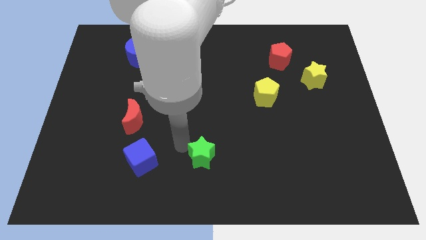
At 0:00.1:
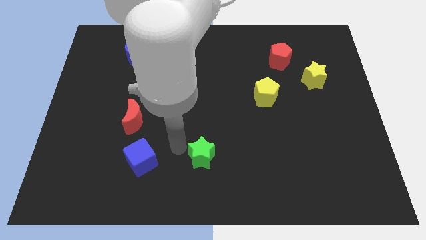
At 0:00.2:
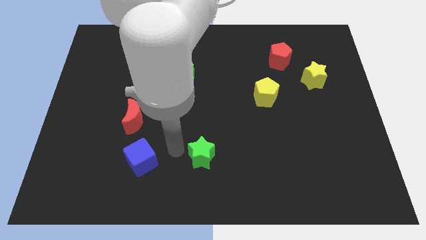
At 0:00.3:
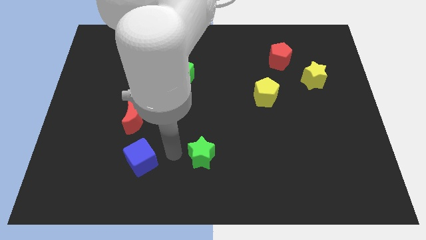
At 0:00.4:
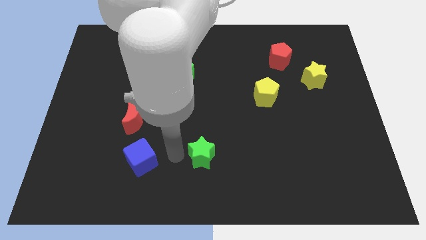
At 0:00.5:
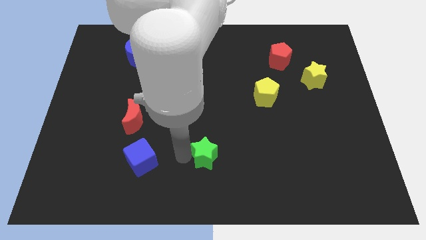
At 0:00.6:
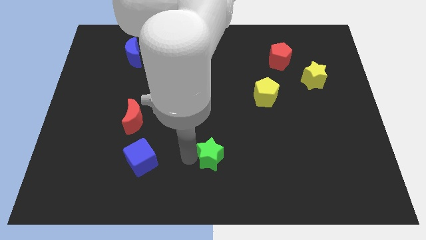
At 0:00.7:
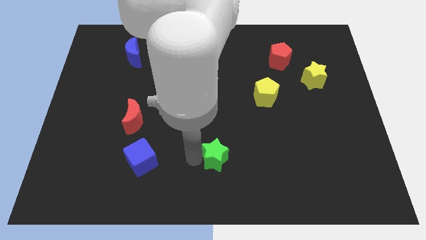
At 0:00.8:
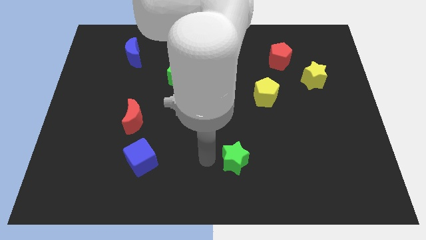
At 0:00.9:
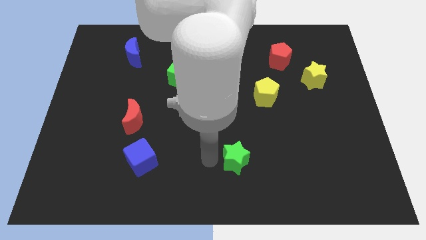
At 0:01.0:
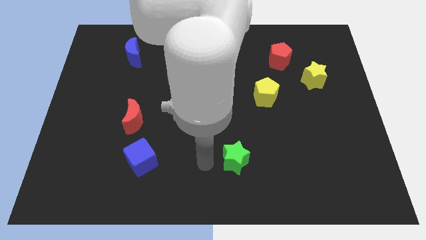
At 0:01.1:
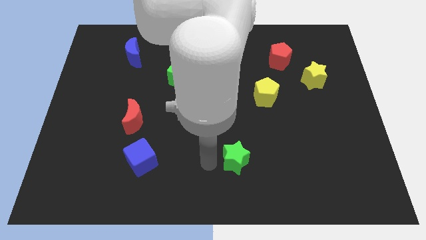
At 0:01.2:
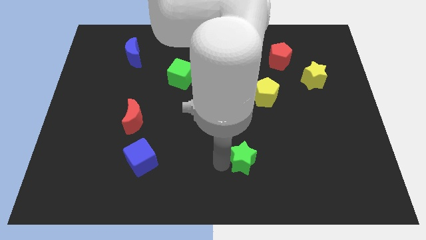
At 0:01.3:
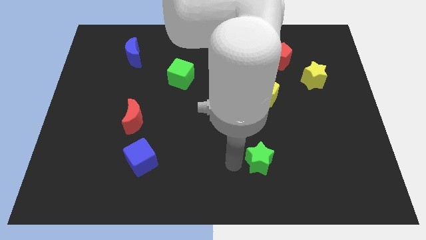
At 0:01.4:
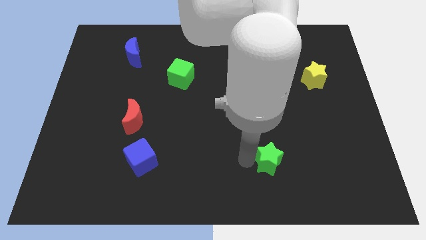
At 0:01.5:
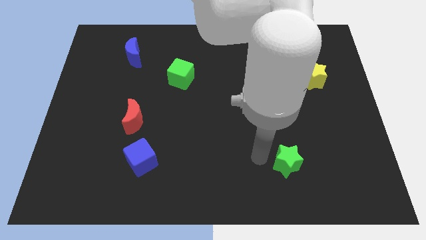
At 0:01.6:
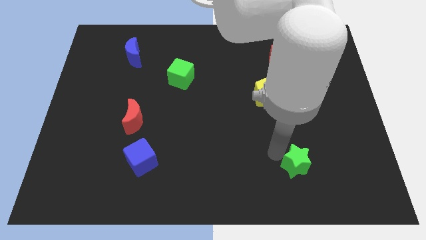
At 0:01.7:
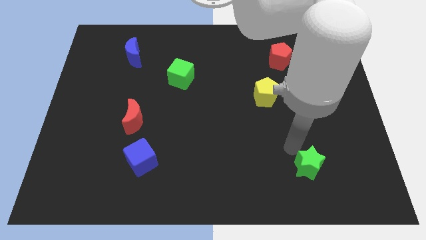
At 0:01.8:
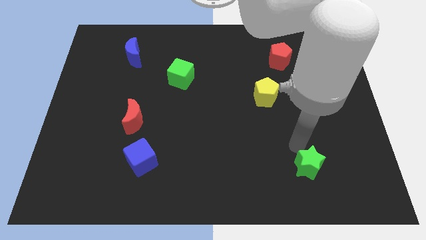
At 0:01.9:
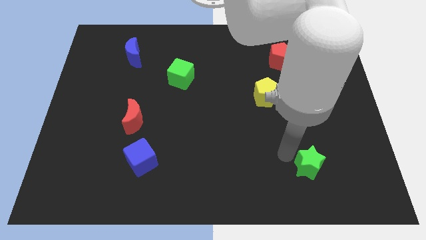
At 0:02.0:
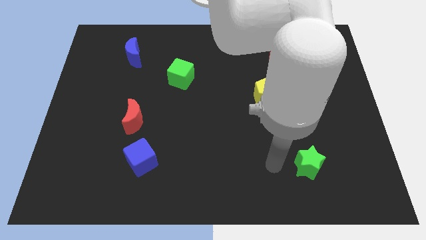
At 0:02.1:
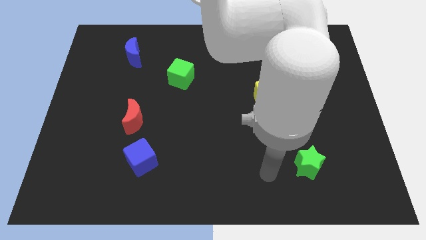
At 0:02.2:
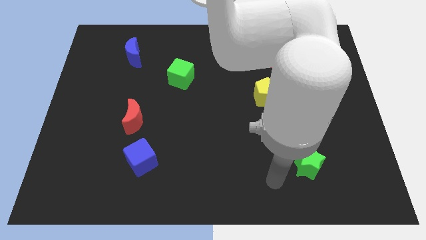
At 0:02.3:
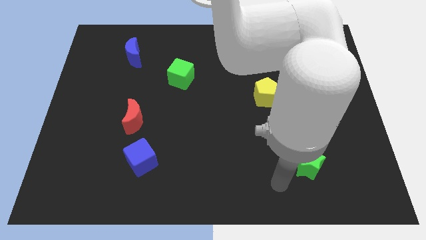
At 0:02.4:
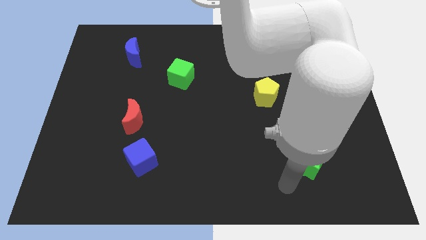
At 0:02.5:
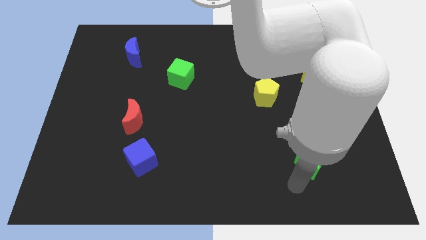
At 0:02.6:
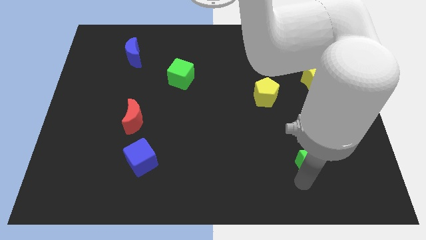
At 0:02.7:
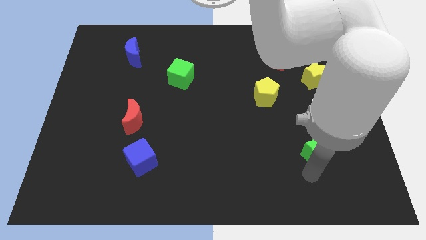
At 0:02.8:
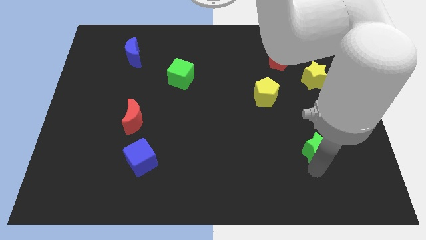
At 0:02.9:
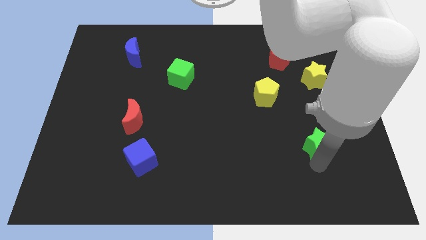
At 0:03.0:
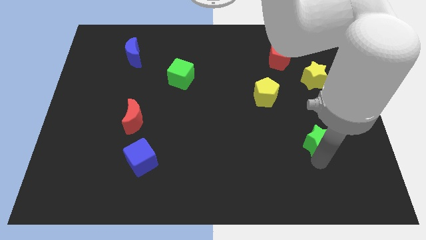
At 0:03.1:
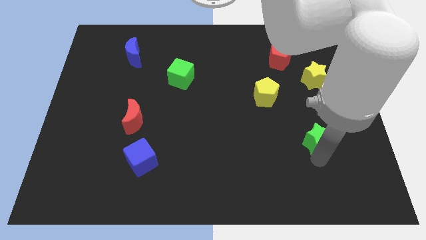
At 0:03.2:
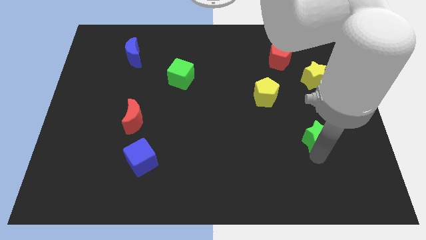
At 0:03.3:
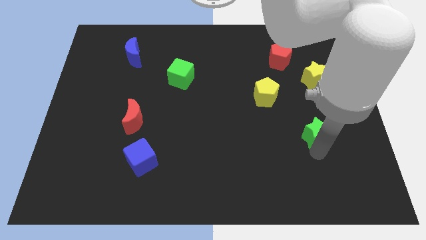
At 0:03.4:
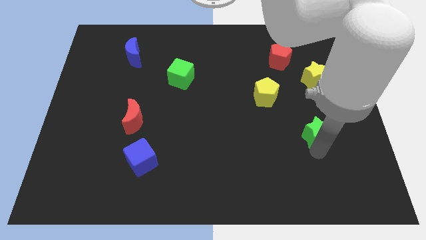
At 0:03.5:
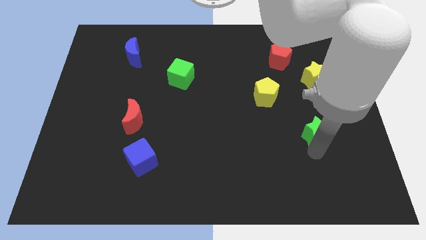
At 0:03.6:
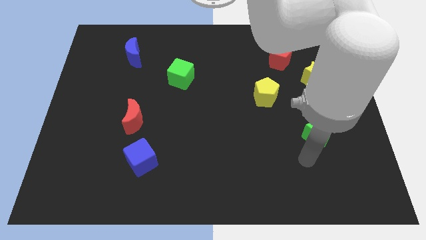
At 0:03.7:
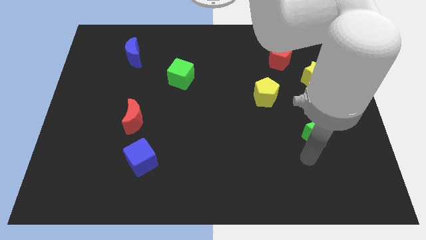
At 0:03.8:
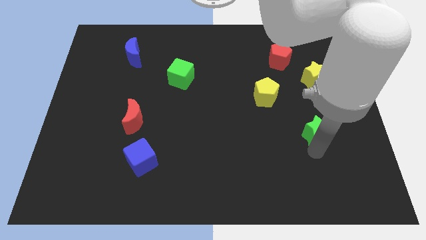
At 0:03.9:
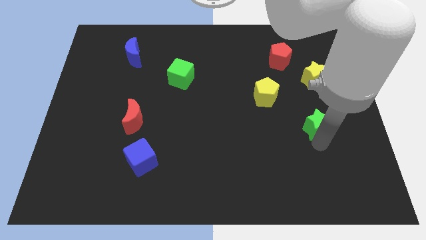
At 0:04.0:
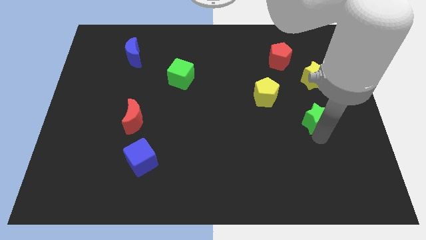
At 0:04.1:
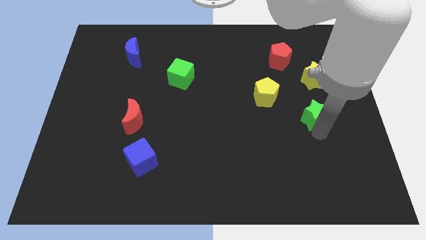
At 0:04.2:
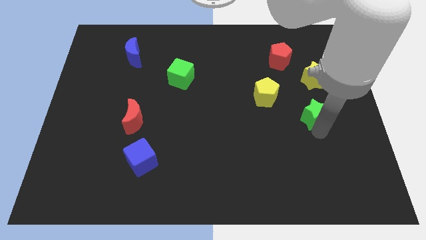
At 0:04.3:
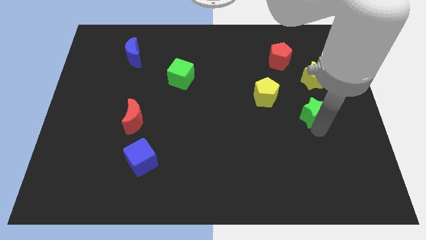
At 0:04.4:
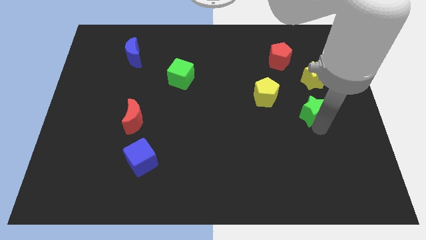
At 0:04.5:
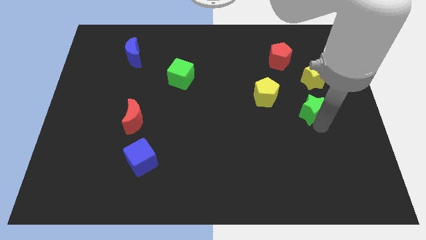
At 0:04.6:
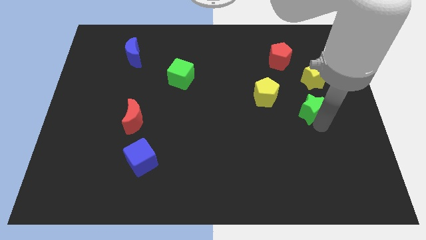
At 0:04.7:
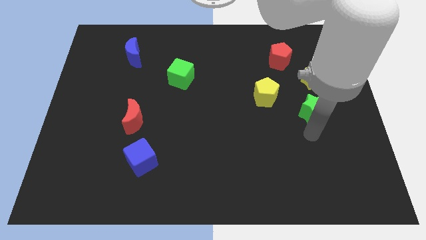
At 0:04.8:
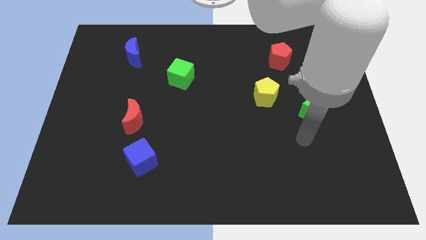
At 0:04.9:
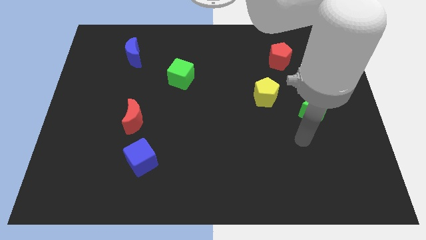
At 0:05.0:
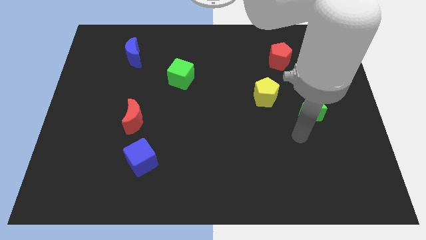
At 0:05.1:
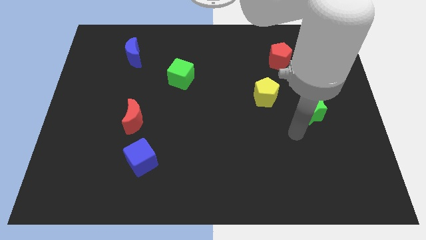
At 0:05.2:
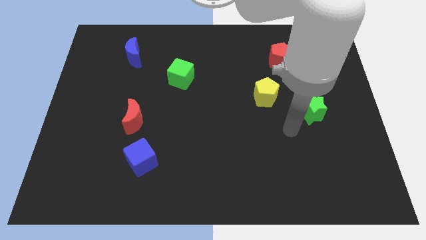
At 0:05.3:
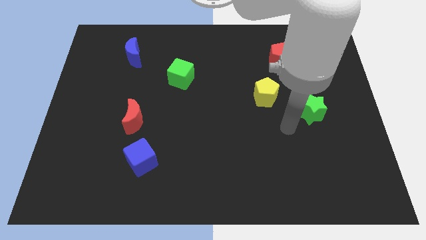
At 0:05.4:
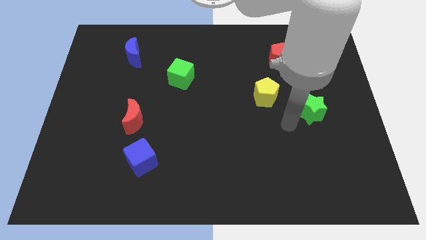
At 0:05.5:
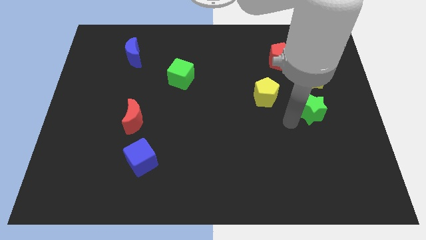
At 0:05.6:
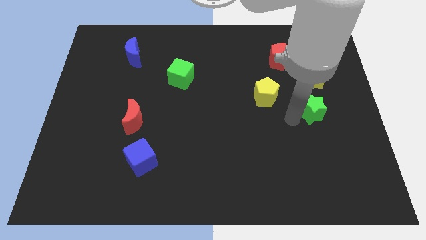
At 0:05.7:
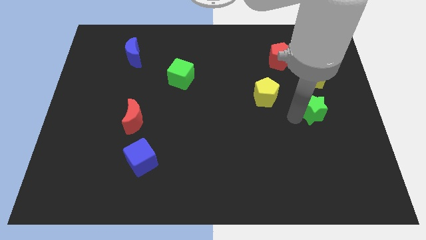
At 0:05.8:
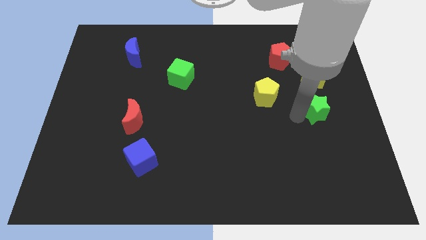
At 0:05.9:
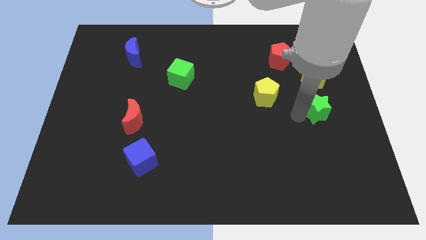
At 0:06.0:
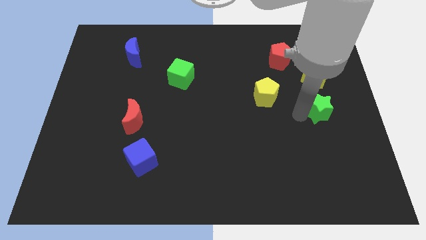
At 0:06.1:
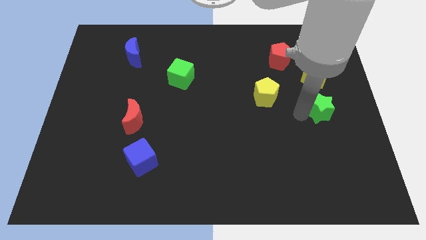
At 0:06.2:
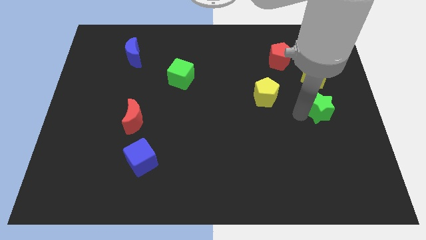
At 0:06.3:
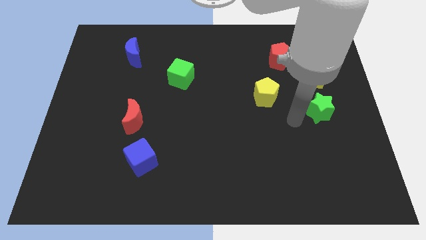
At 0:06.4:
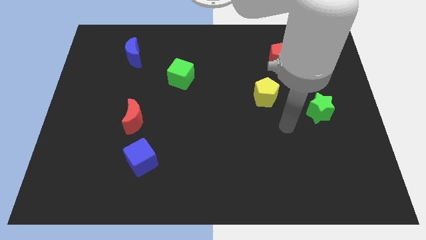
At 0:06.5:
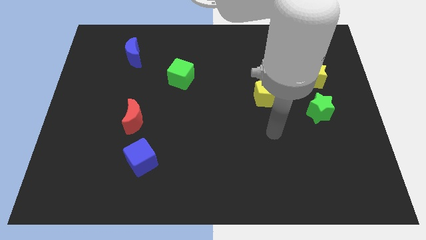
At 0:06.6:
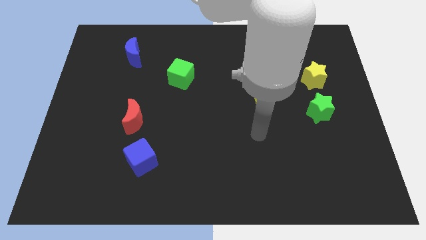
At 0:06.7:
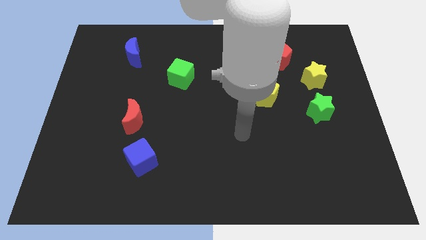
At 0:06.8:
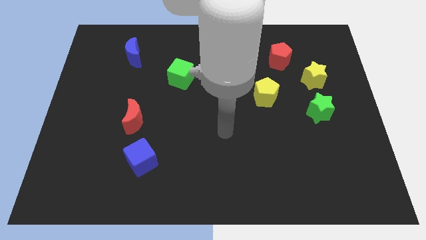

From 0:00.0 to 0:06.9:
push the green star and place it below the yellow star

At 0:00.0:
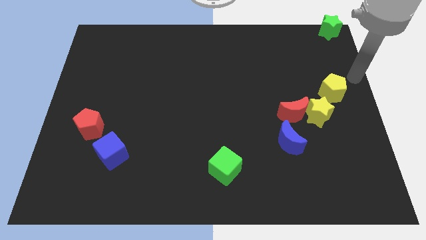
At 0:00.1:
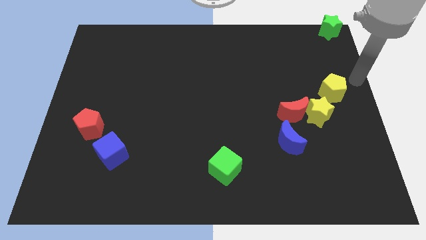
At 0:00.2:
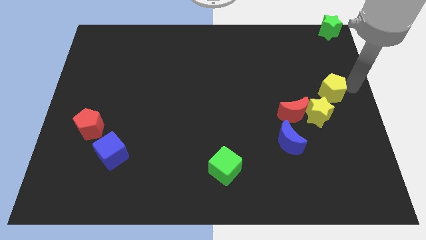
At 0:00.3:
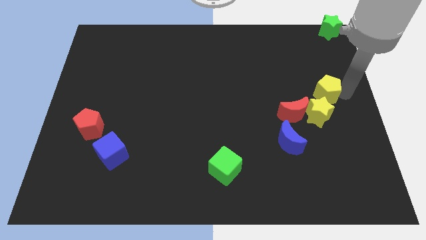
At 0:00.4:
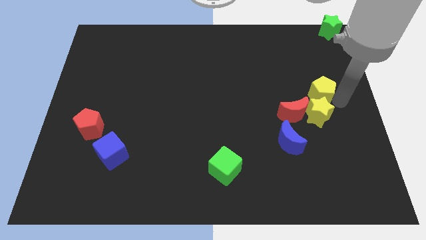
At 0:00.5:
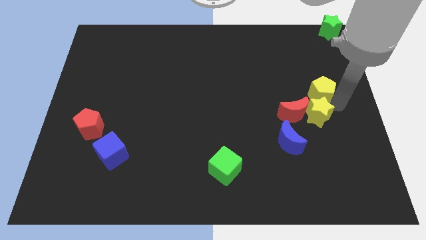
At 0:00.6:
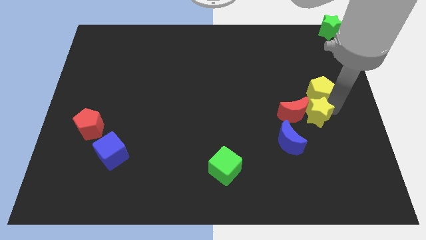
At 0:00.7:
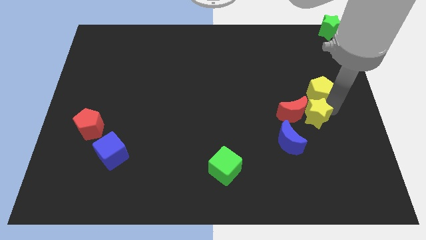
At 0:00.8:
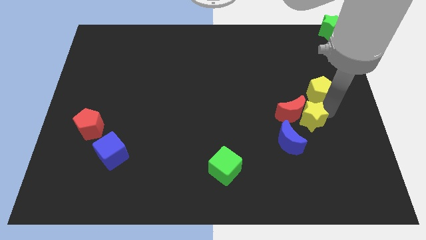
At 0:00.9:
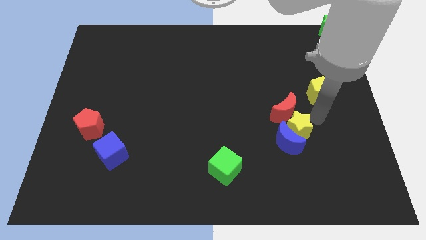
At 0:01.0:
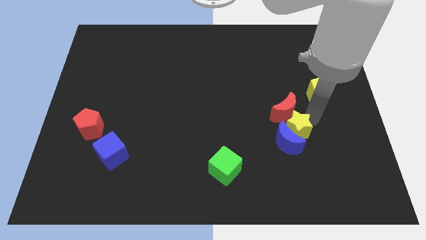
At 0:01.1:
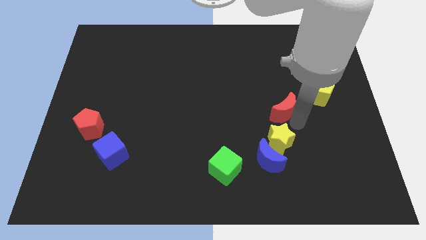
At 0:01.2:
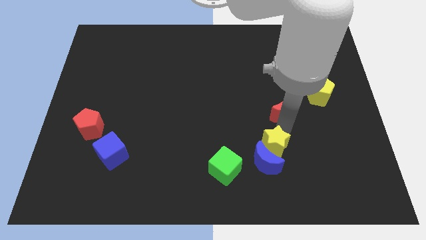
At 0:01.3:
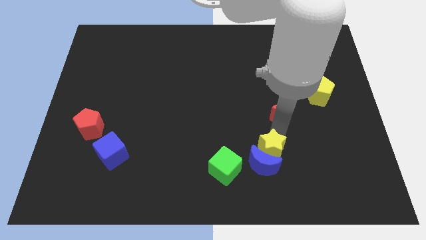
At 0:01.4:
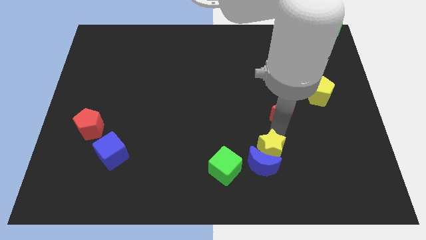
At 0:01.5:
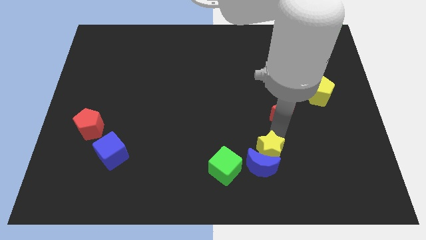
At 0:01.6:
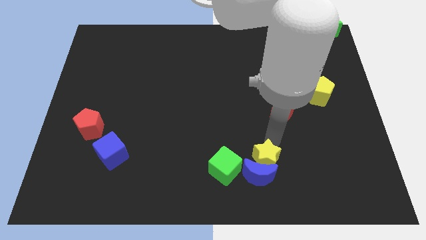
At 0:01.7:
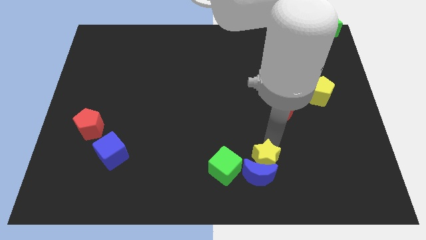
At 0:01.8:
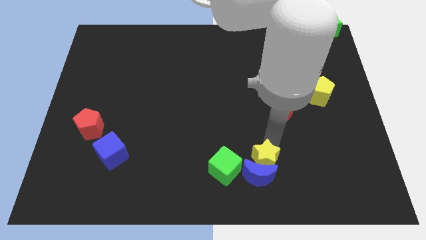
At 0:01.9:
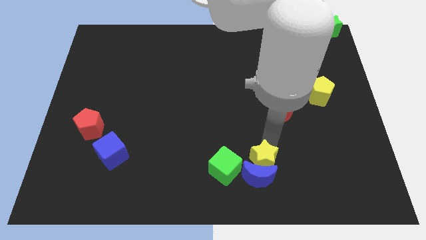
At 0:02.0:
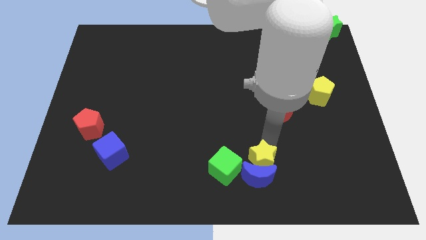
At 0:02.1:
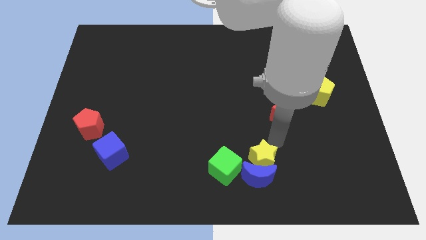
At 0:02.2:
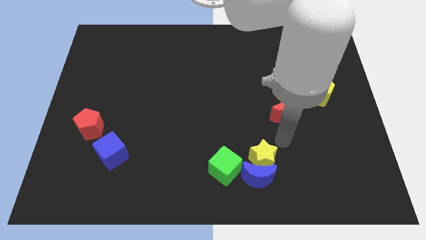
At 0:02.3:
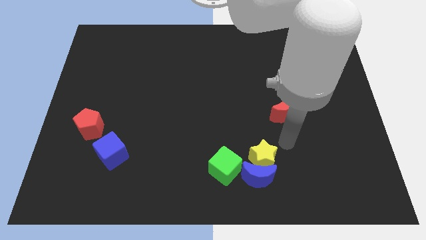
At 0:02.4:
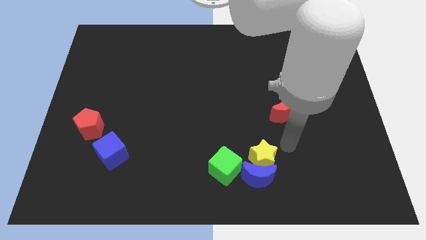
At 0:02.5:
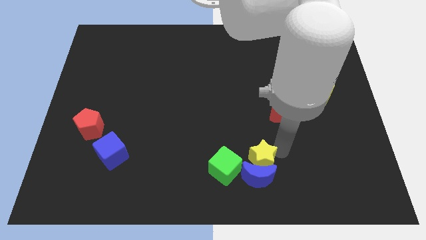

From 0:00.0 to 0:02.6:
separate the yellow star from yellow pentagon
